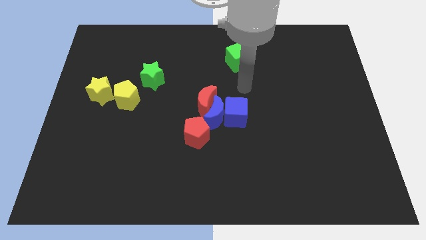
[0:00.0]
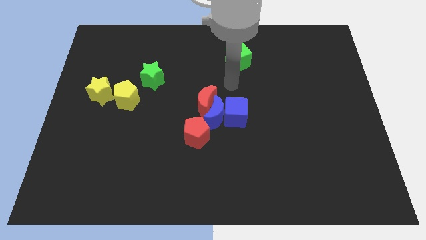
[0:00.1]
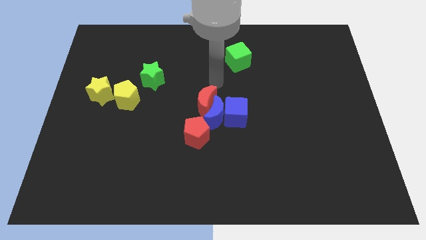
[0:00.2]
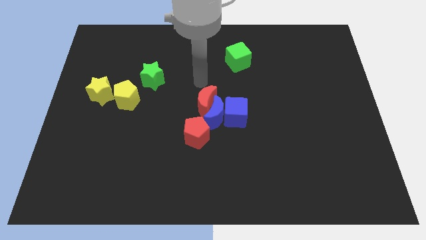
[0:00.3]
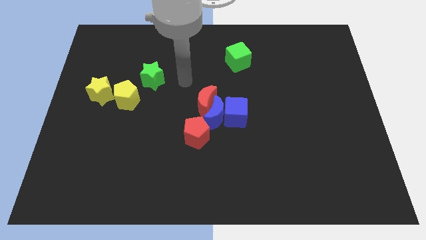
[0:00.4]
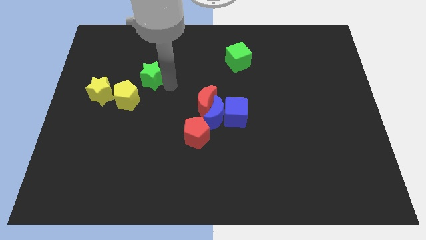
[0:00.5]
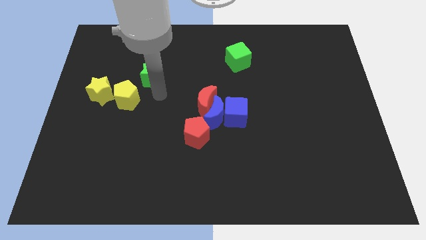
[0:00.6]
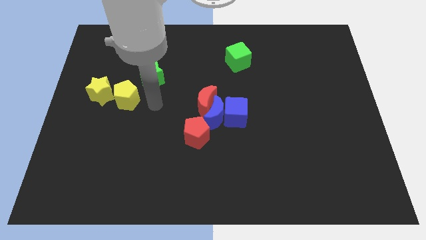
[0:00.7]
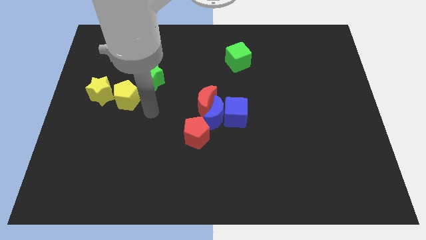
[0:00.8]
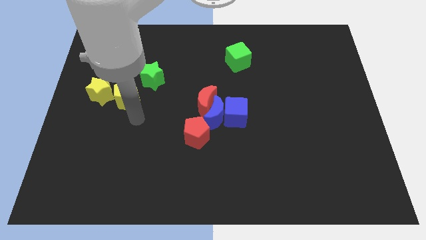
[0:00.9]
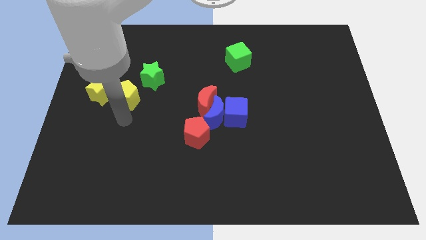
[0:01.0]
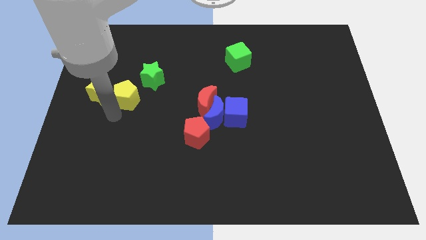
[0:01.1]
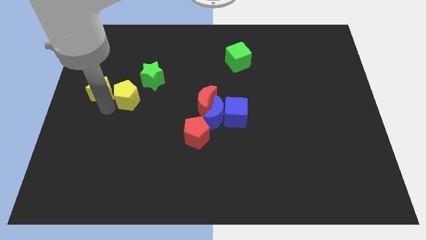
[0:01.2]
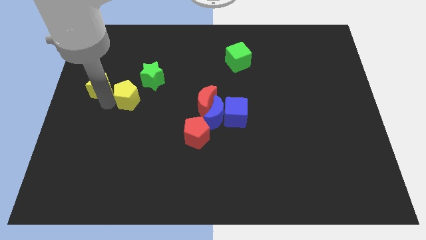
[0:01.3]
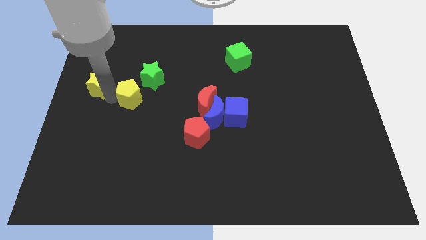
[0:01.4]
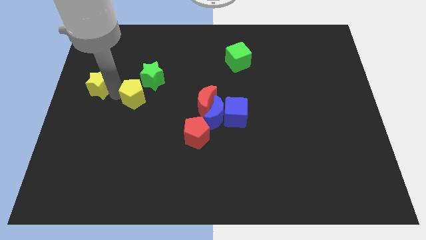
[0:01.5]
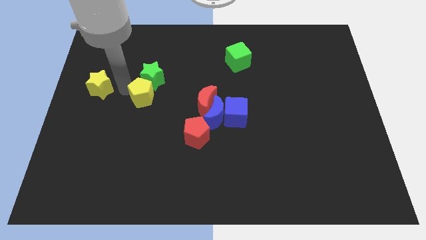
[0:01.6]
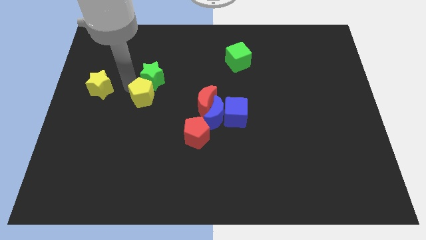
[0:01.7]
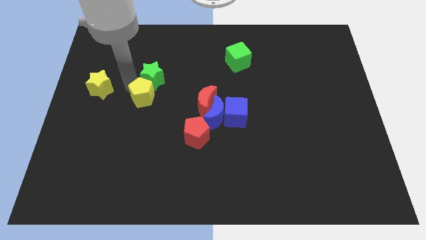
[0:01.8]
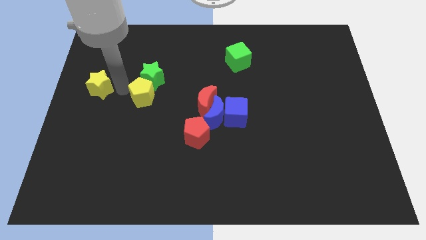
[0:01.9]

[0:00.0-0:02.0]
separate the yellow pentagon from the yellow star

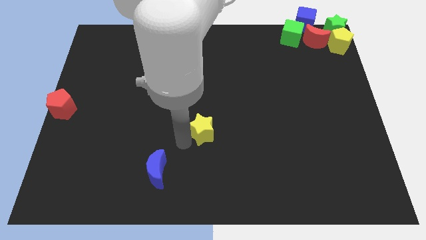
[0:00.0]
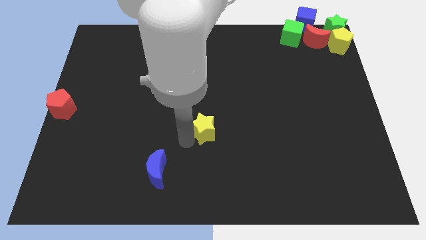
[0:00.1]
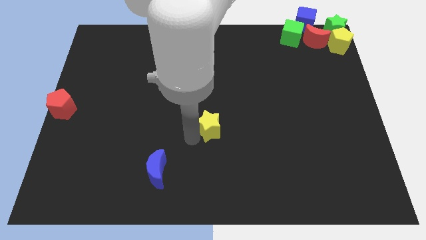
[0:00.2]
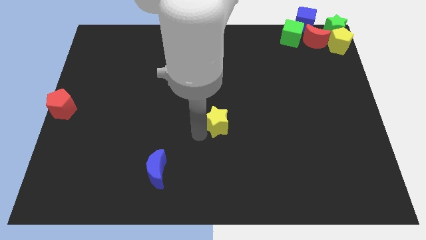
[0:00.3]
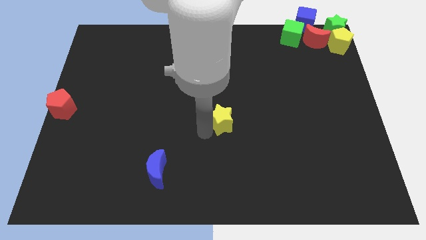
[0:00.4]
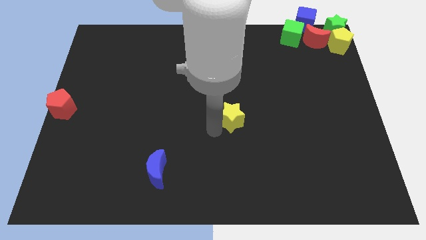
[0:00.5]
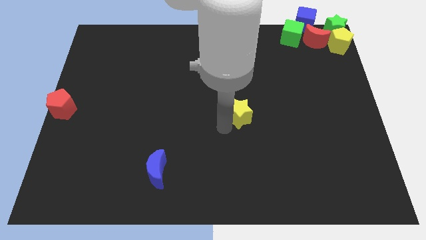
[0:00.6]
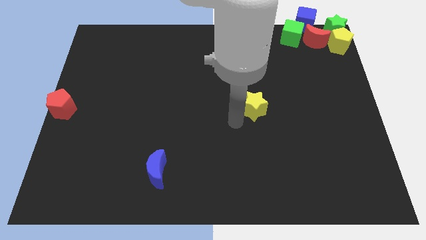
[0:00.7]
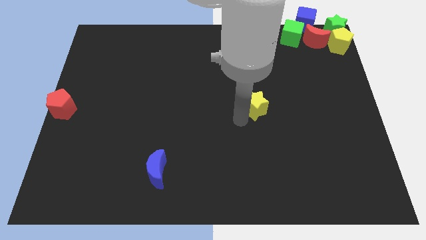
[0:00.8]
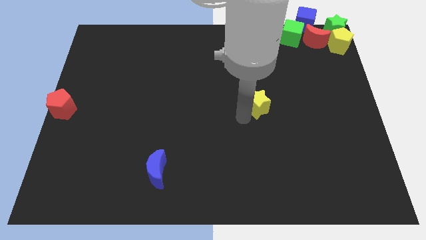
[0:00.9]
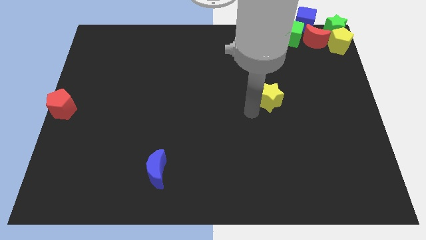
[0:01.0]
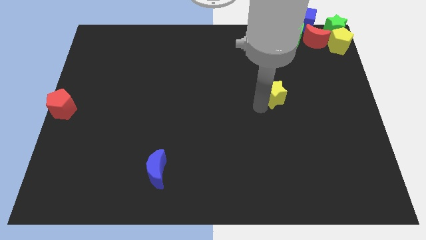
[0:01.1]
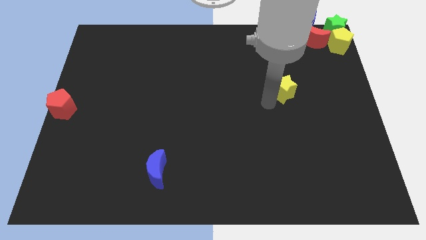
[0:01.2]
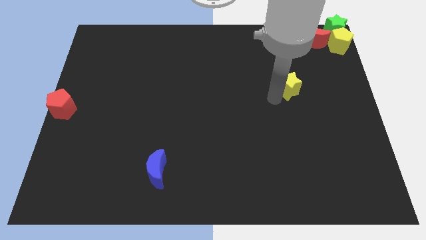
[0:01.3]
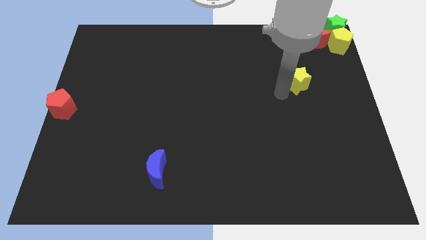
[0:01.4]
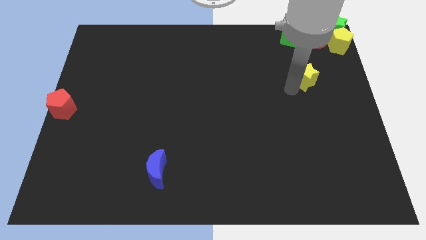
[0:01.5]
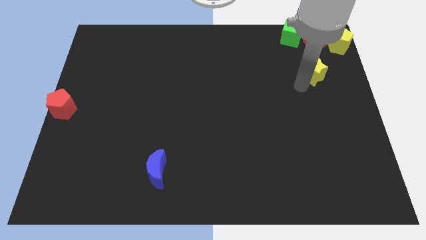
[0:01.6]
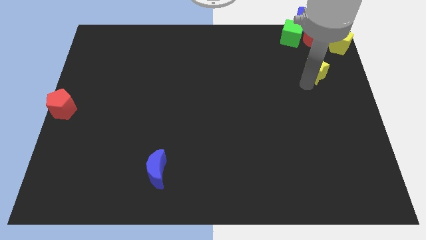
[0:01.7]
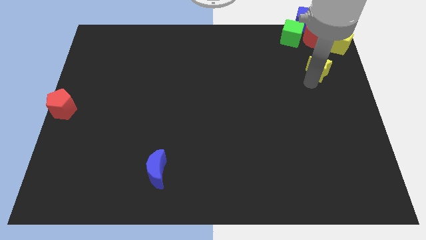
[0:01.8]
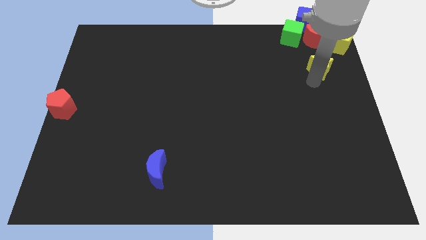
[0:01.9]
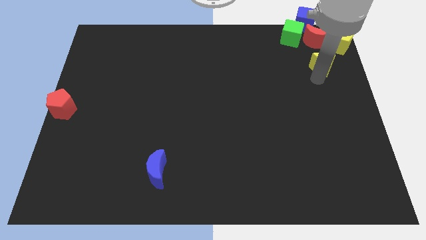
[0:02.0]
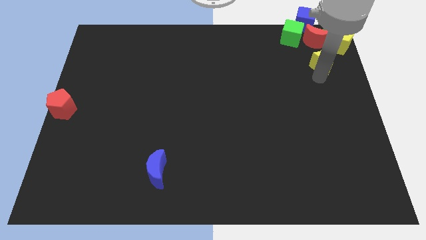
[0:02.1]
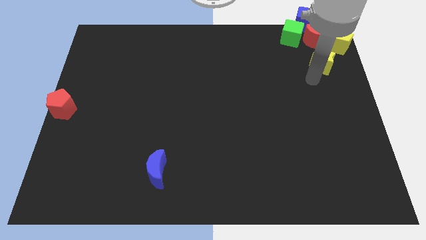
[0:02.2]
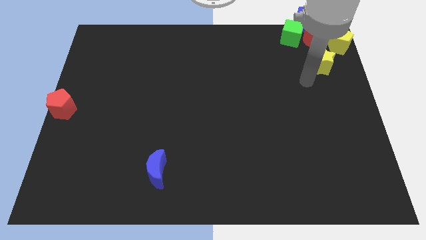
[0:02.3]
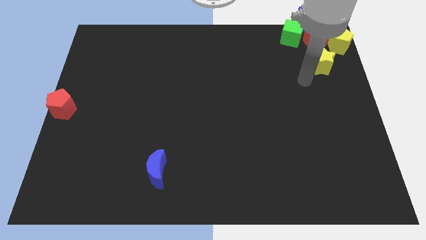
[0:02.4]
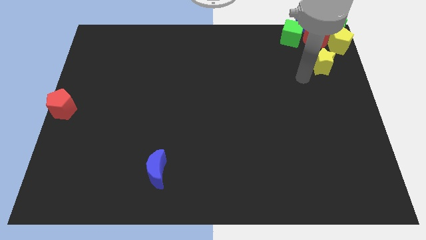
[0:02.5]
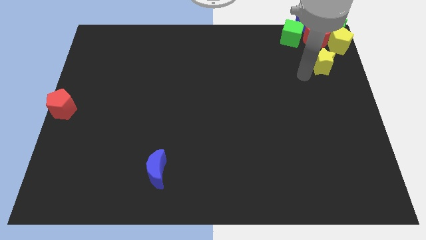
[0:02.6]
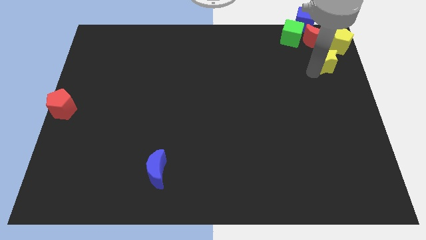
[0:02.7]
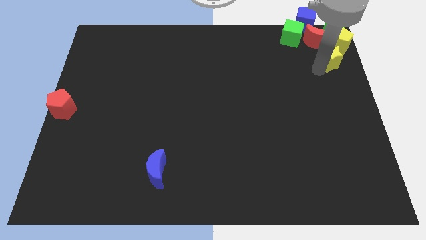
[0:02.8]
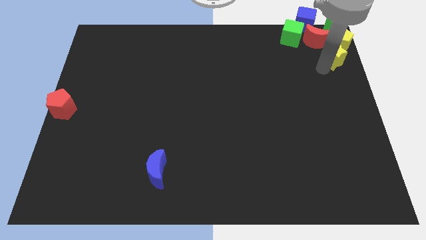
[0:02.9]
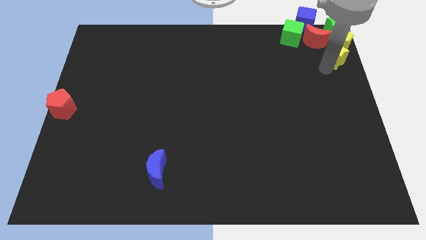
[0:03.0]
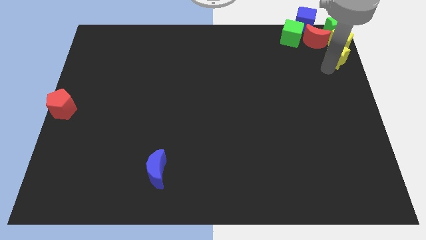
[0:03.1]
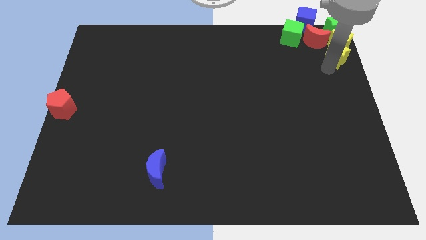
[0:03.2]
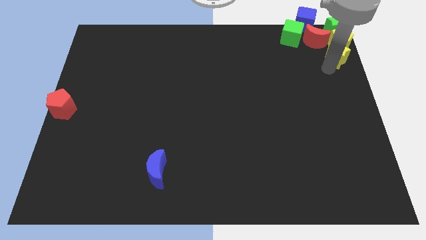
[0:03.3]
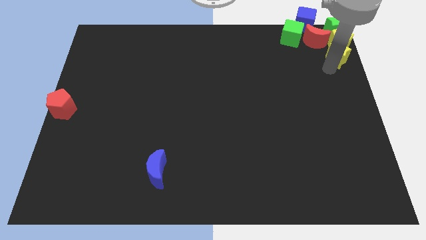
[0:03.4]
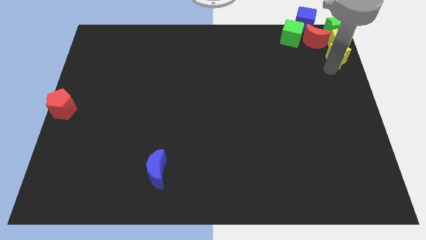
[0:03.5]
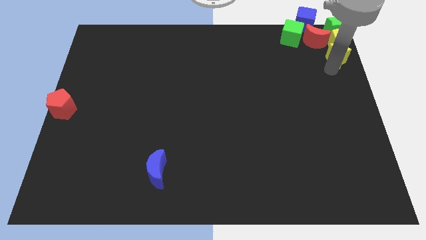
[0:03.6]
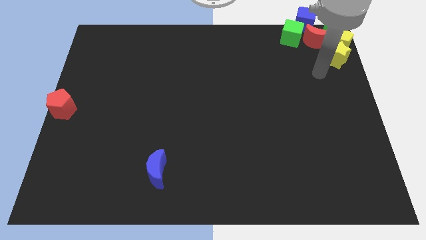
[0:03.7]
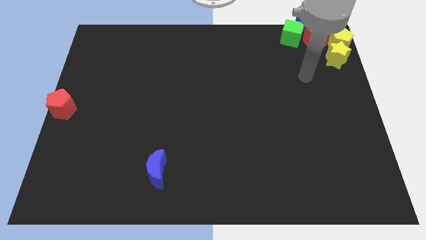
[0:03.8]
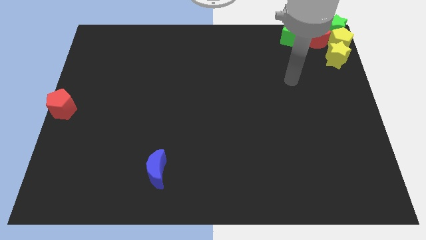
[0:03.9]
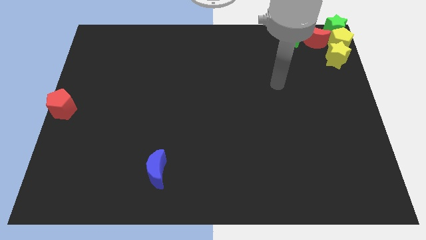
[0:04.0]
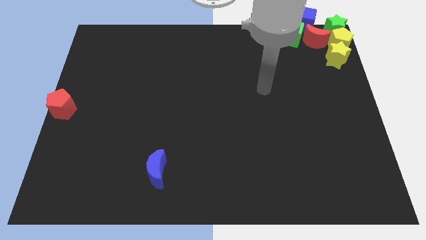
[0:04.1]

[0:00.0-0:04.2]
push the yellow star into the yellow pentagon

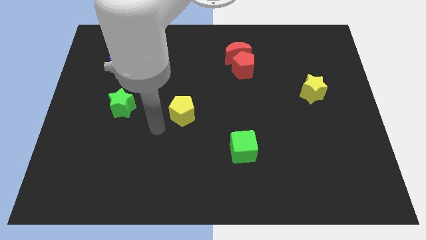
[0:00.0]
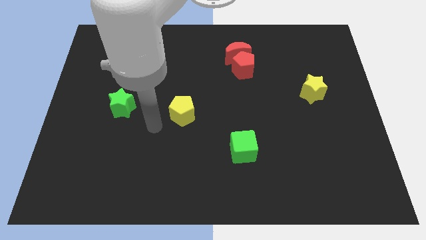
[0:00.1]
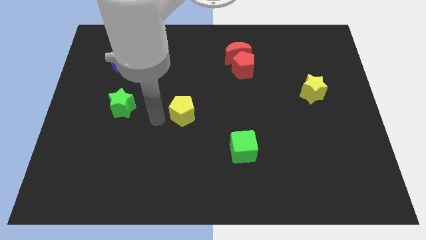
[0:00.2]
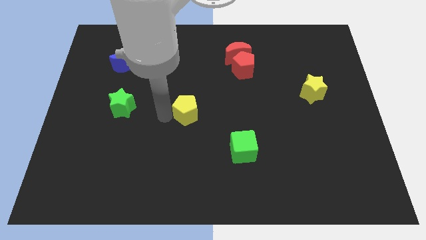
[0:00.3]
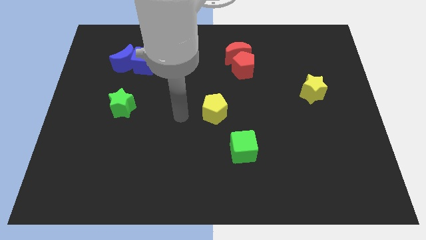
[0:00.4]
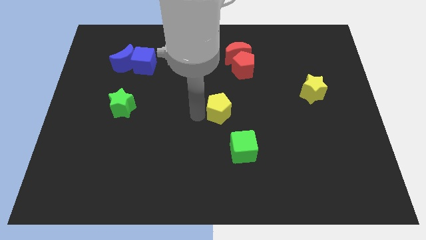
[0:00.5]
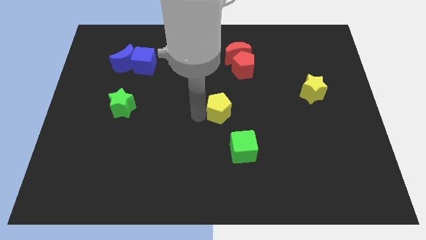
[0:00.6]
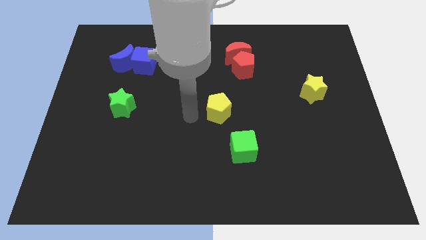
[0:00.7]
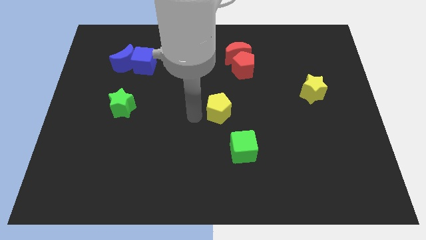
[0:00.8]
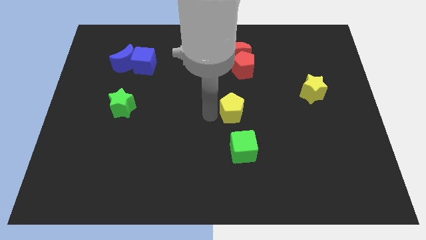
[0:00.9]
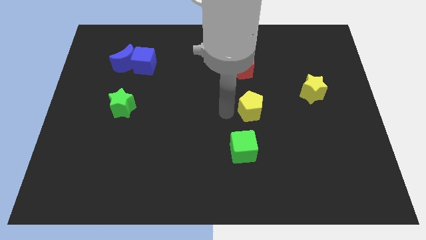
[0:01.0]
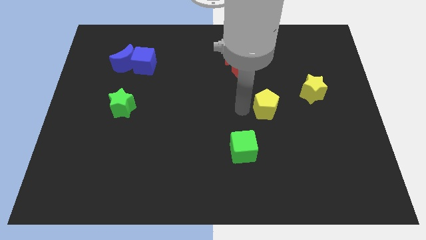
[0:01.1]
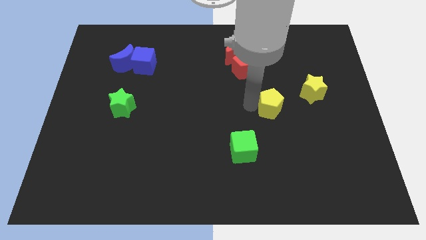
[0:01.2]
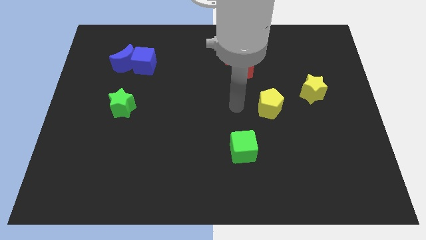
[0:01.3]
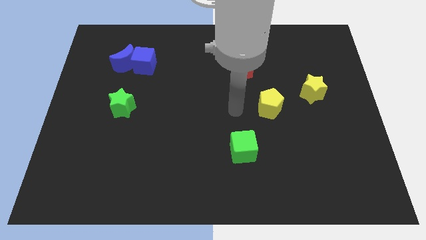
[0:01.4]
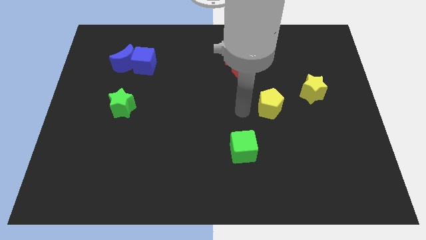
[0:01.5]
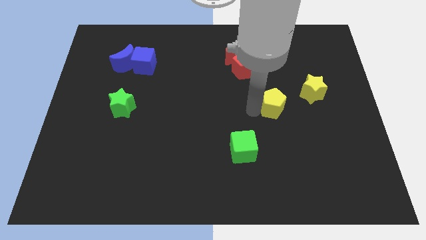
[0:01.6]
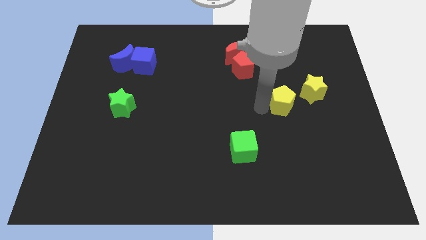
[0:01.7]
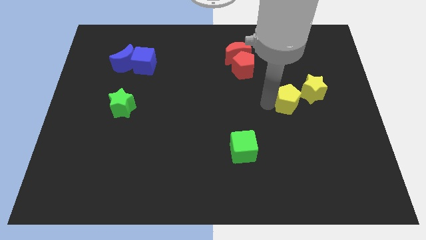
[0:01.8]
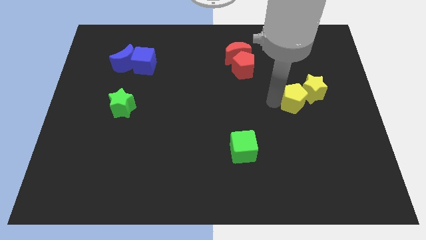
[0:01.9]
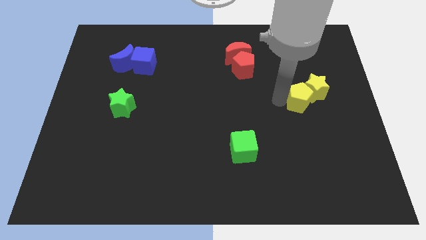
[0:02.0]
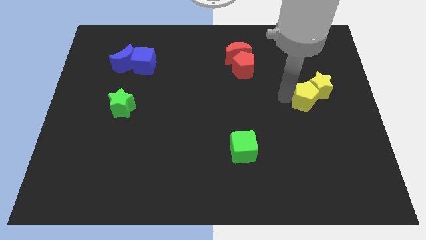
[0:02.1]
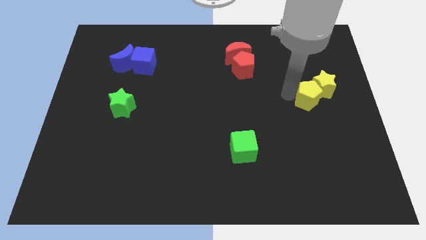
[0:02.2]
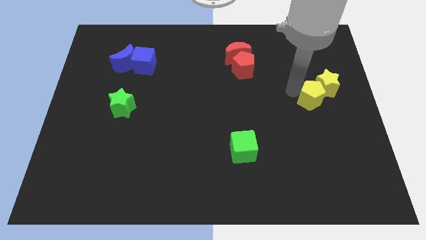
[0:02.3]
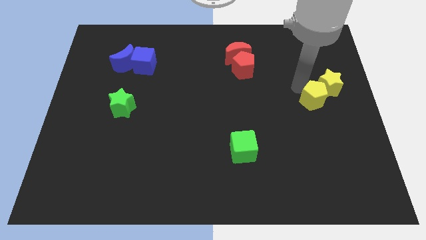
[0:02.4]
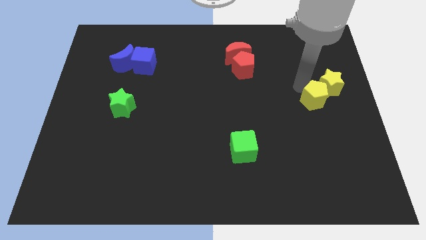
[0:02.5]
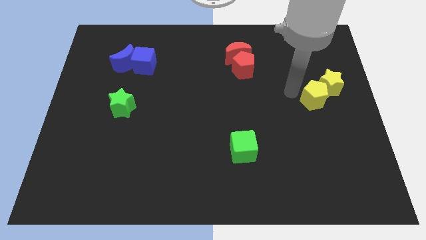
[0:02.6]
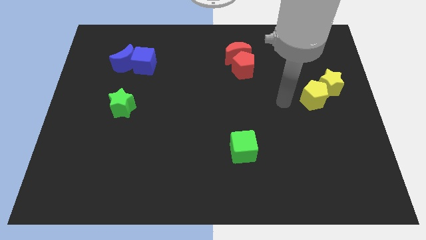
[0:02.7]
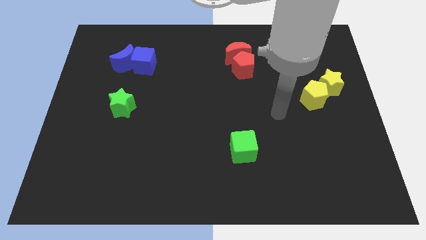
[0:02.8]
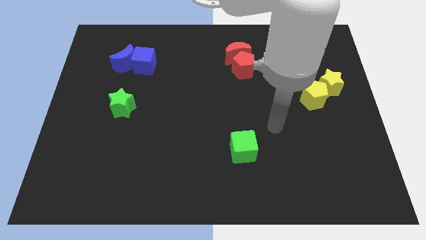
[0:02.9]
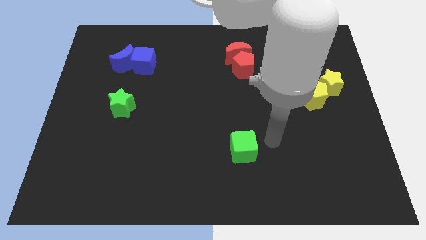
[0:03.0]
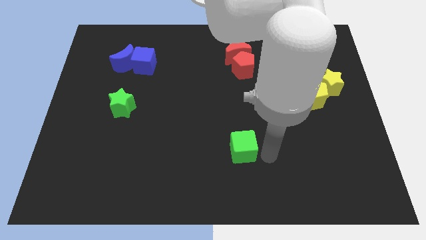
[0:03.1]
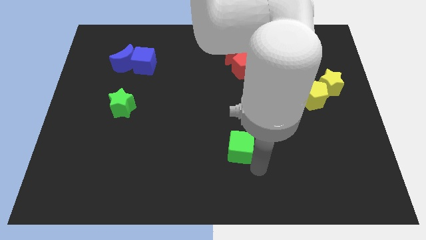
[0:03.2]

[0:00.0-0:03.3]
push the yellow pentagon to the left of the yellow star
